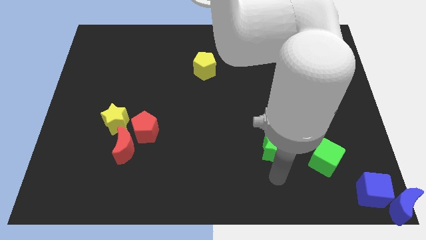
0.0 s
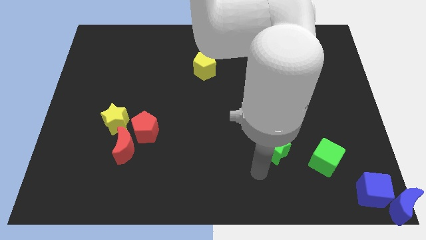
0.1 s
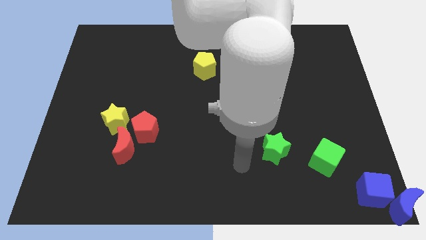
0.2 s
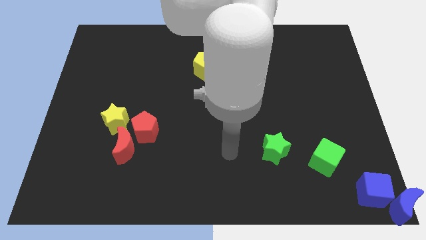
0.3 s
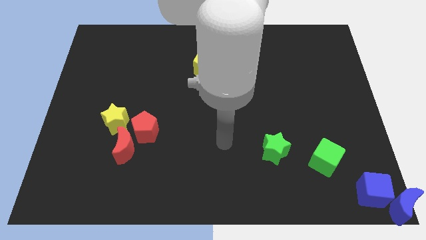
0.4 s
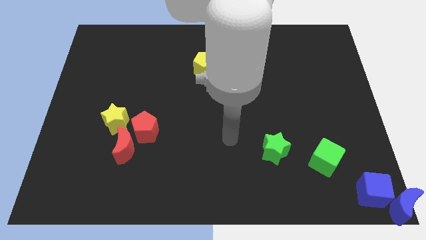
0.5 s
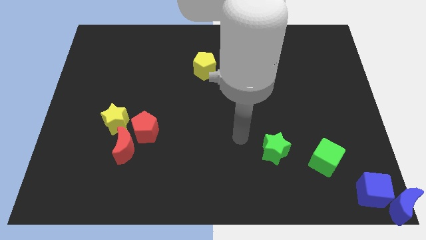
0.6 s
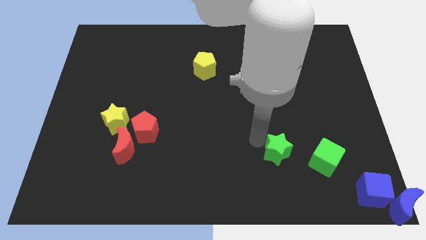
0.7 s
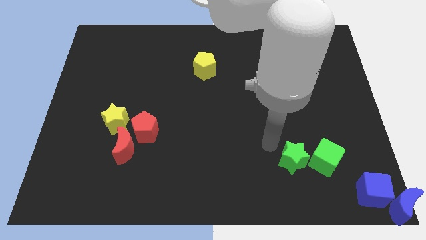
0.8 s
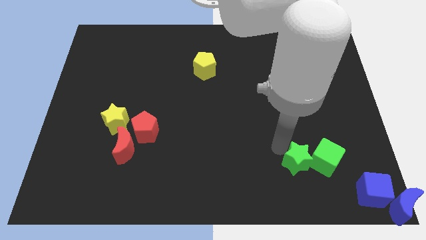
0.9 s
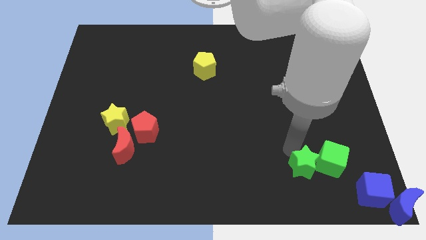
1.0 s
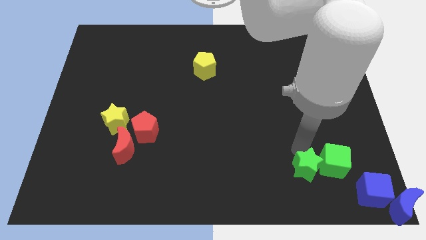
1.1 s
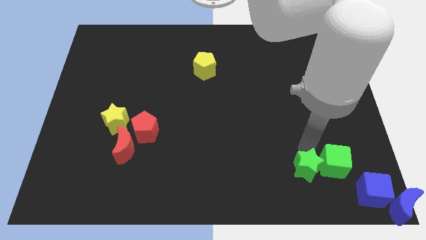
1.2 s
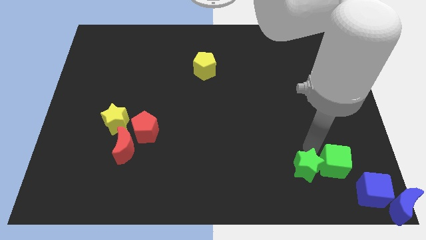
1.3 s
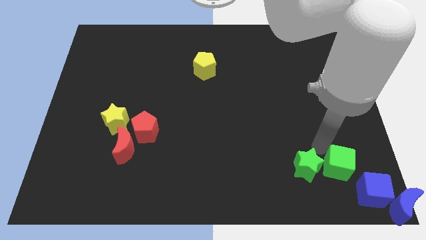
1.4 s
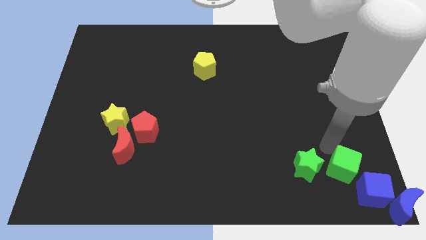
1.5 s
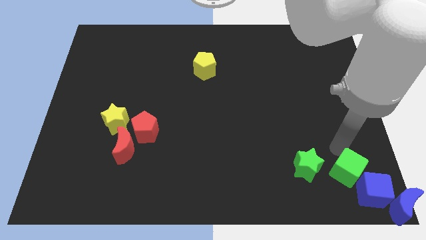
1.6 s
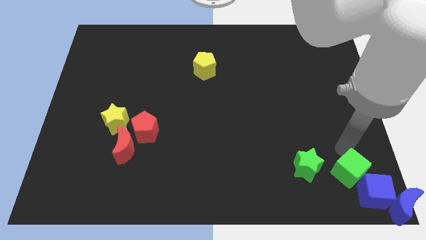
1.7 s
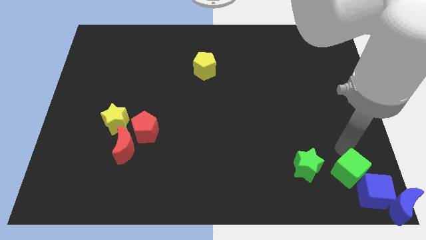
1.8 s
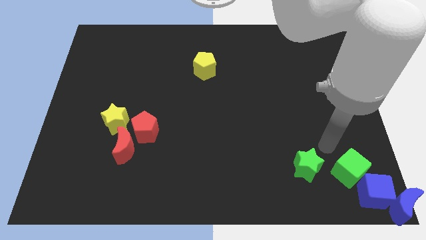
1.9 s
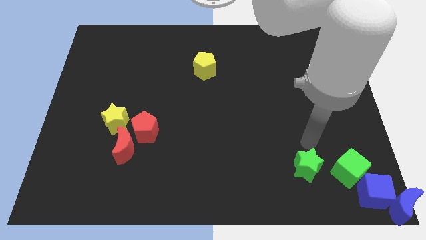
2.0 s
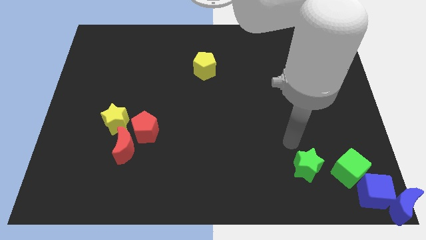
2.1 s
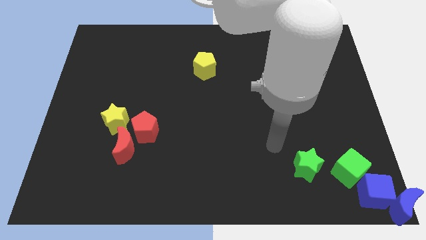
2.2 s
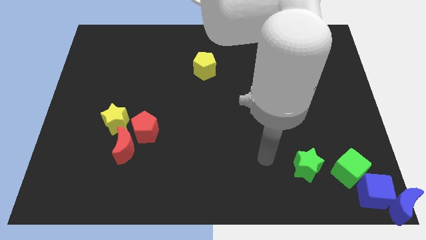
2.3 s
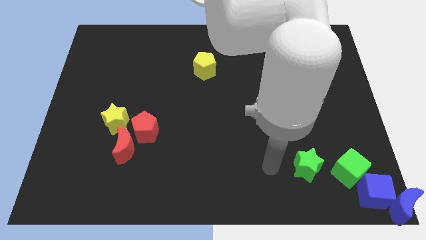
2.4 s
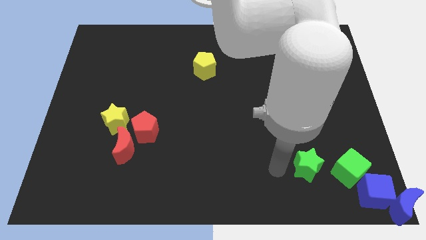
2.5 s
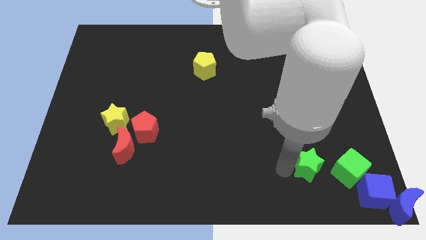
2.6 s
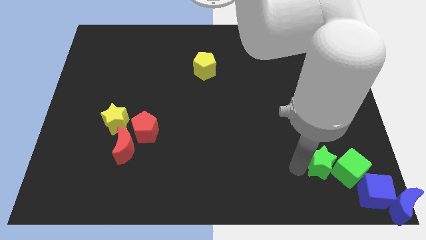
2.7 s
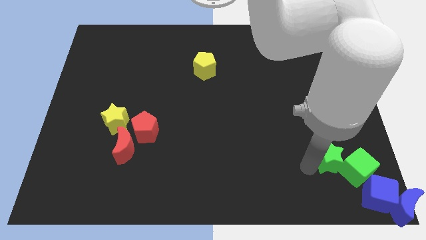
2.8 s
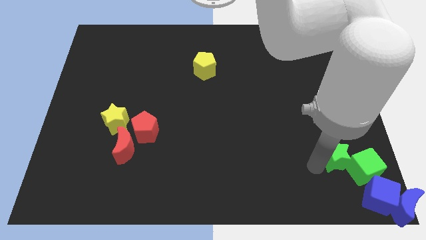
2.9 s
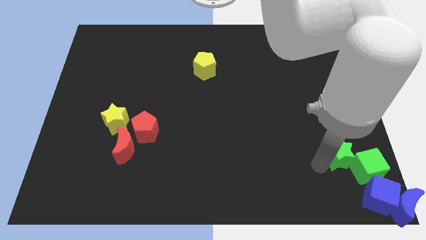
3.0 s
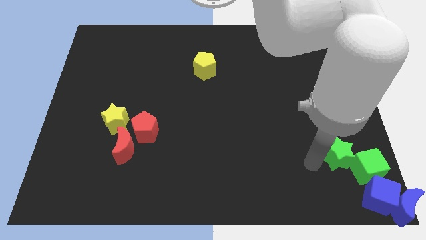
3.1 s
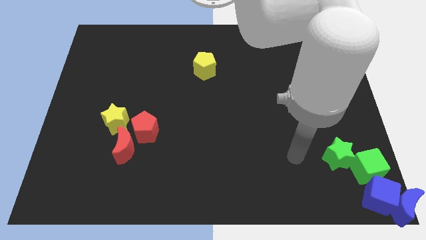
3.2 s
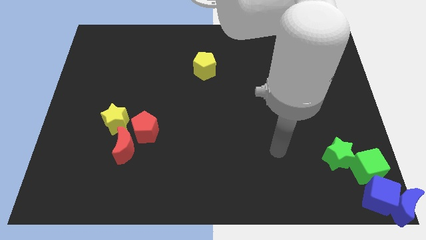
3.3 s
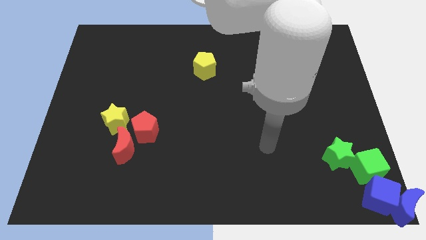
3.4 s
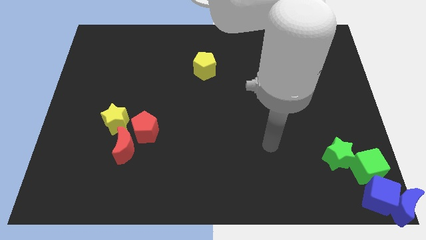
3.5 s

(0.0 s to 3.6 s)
push green star into the group of blocks

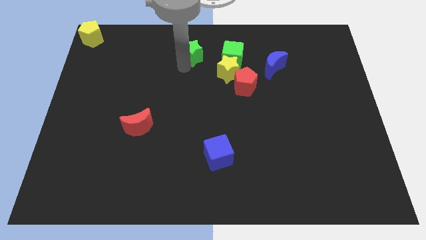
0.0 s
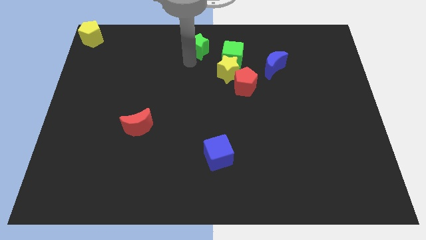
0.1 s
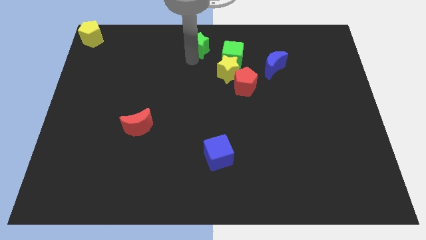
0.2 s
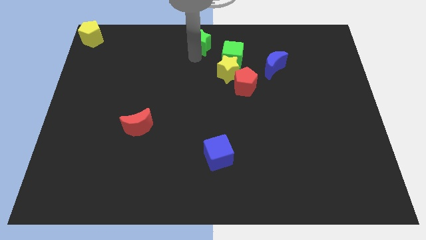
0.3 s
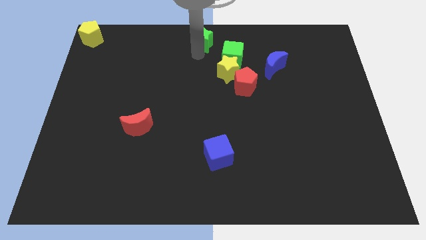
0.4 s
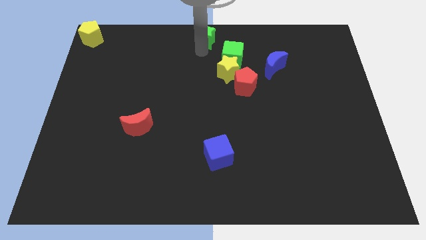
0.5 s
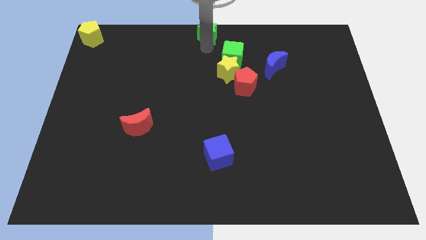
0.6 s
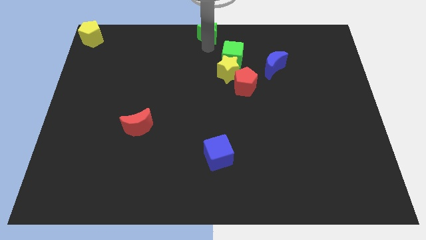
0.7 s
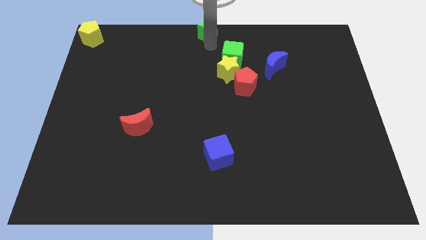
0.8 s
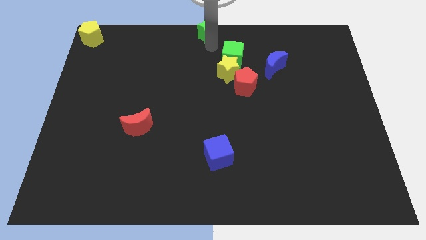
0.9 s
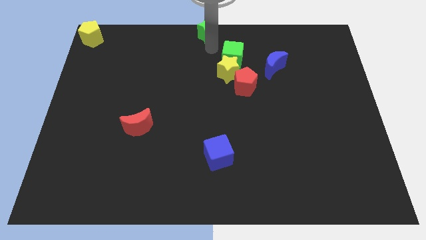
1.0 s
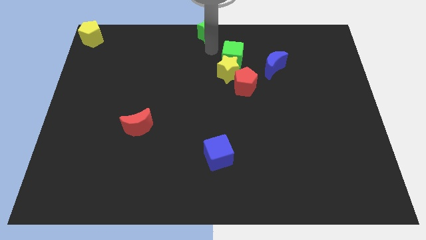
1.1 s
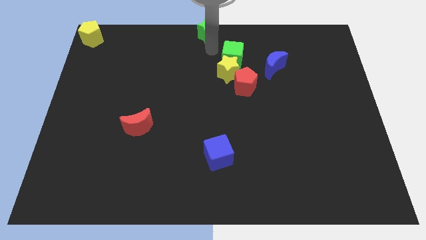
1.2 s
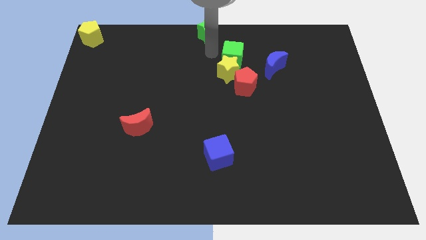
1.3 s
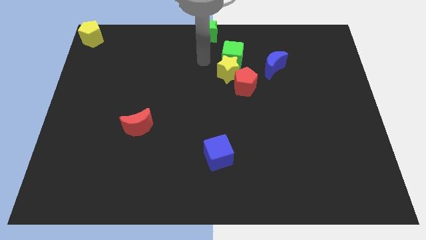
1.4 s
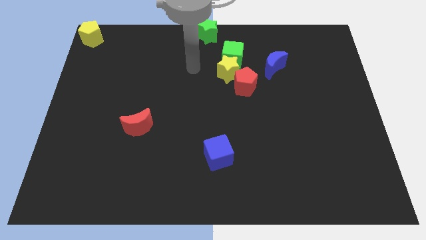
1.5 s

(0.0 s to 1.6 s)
move the green star to the top middle

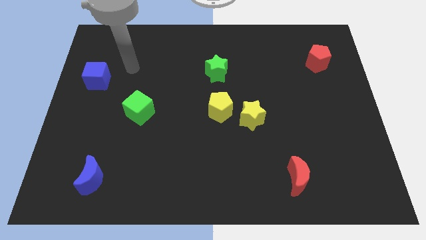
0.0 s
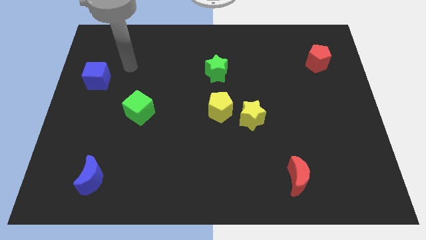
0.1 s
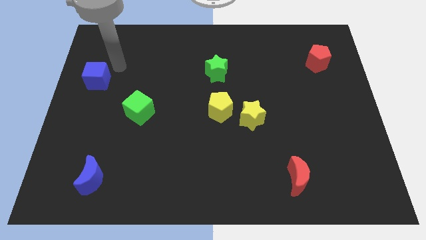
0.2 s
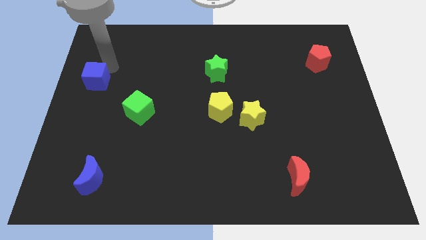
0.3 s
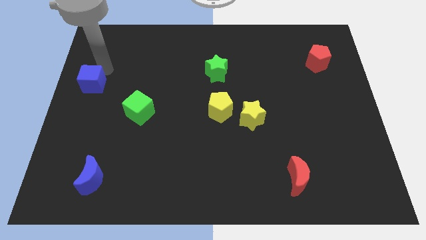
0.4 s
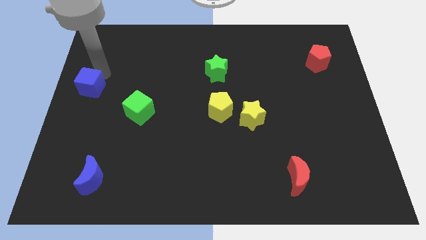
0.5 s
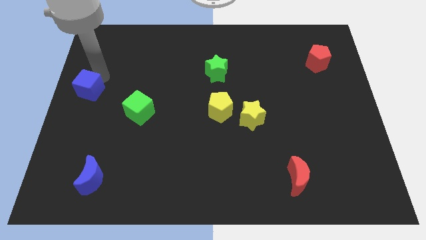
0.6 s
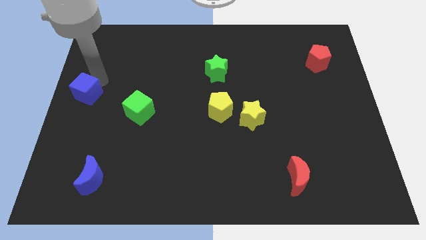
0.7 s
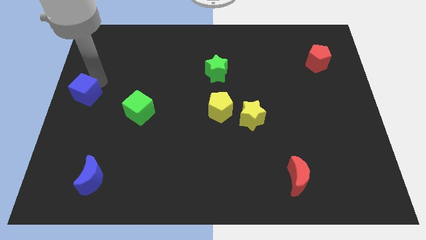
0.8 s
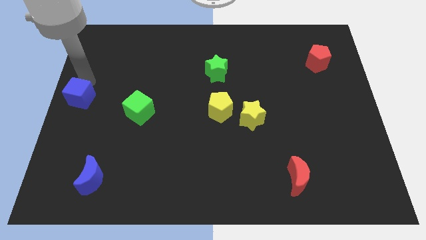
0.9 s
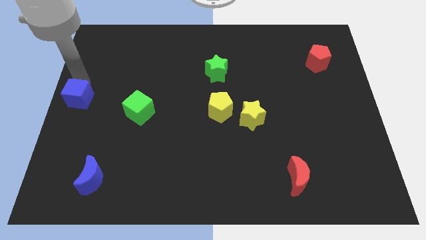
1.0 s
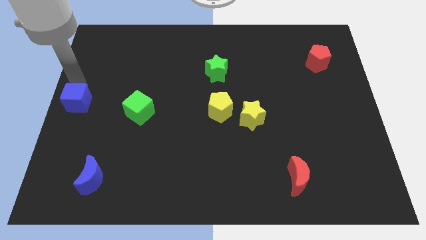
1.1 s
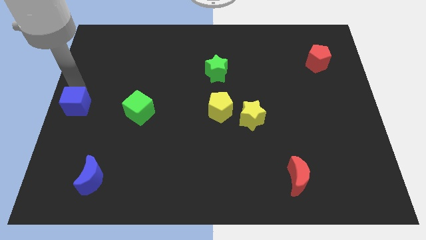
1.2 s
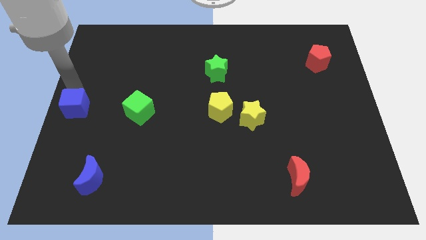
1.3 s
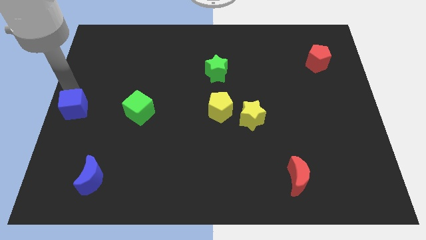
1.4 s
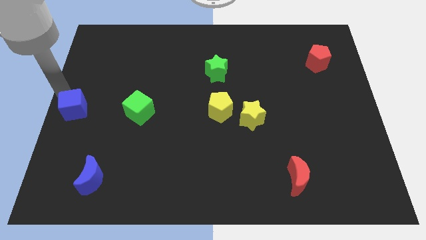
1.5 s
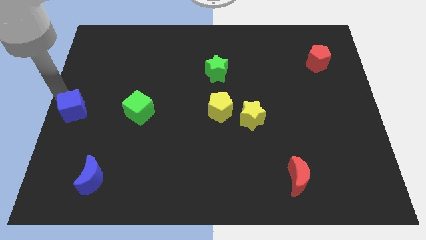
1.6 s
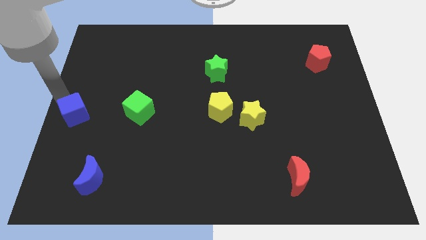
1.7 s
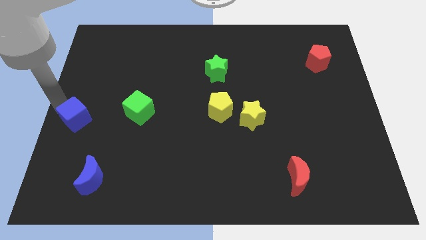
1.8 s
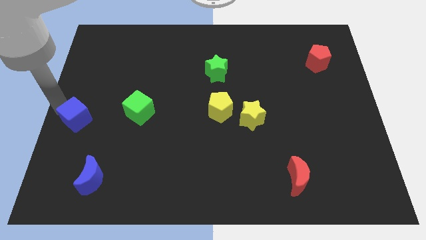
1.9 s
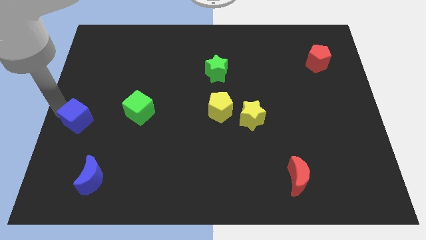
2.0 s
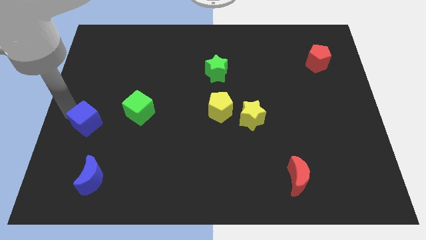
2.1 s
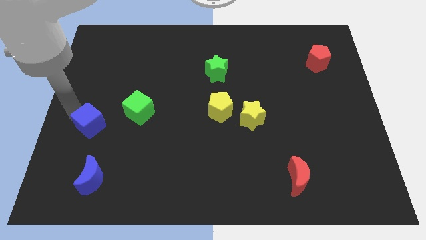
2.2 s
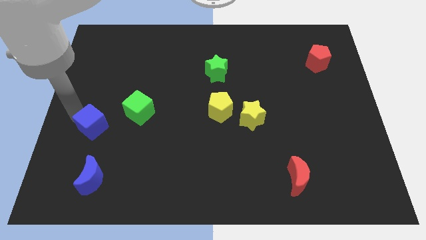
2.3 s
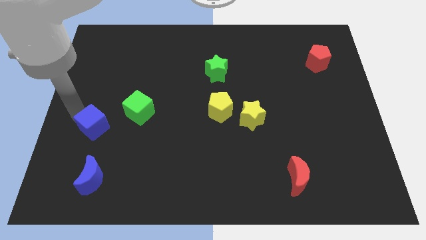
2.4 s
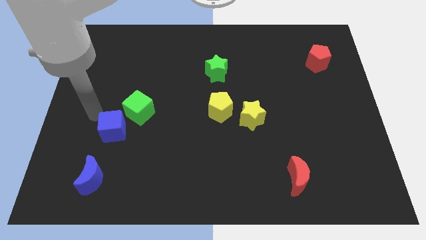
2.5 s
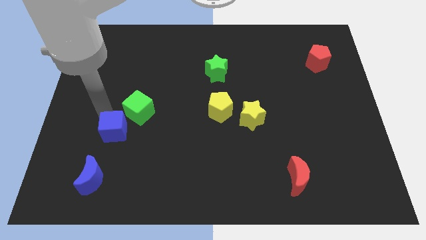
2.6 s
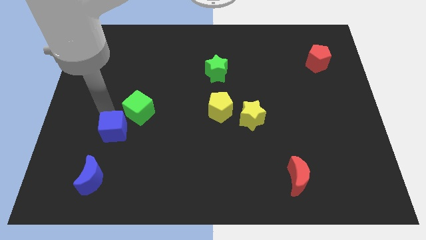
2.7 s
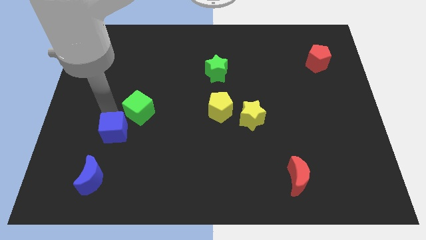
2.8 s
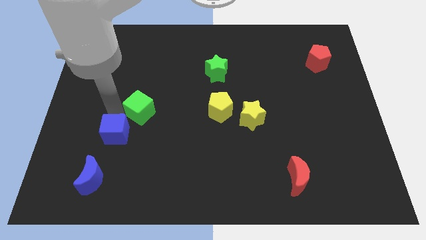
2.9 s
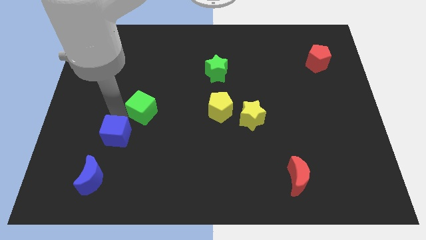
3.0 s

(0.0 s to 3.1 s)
slide the blue cube diagonally to the bottom left of green cube

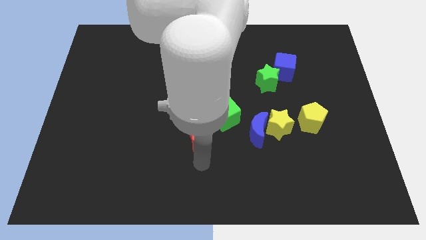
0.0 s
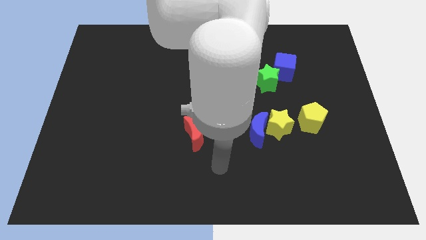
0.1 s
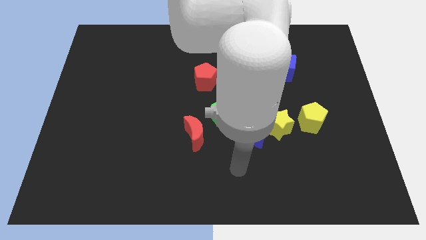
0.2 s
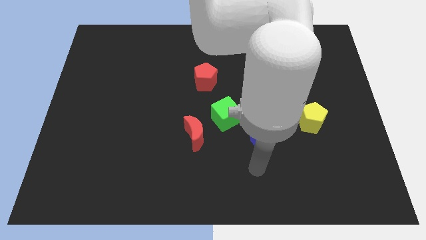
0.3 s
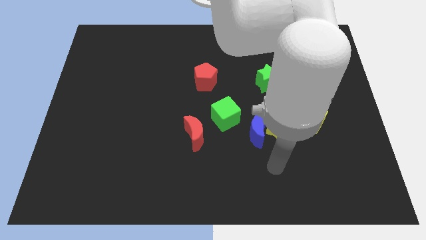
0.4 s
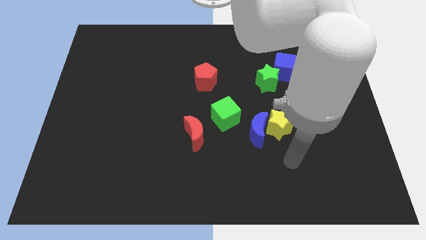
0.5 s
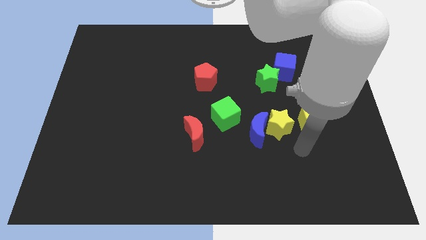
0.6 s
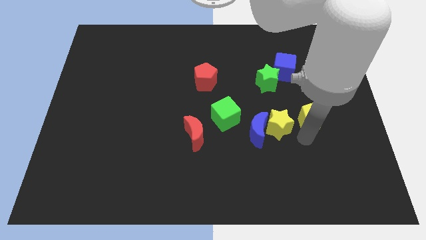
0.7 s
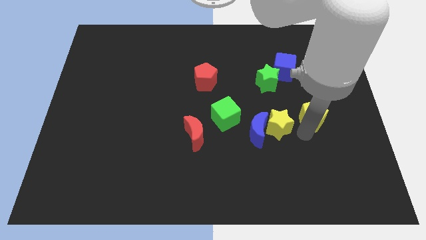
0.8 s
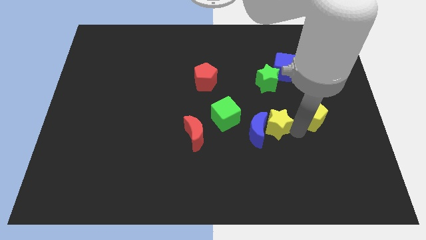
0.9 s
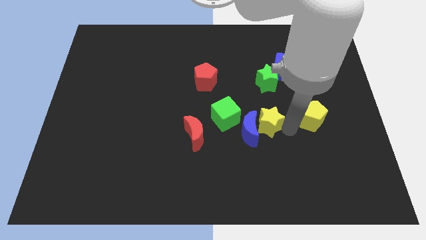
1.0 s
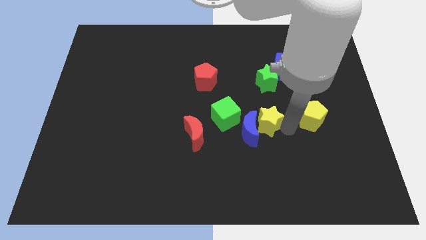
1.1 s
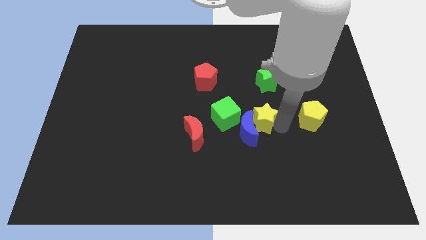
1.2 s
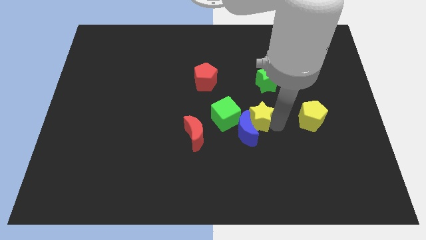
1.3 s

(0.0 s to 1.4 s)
push the yellow star and blue moon into the green cube
